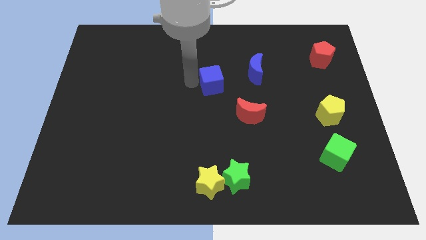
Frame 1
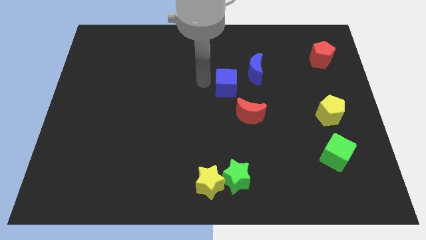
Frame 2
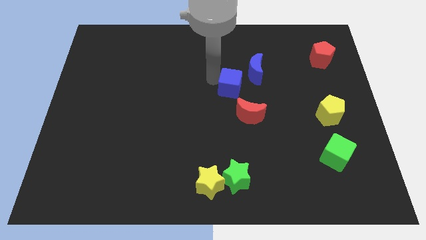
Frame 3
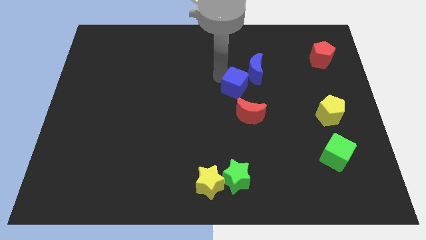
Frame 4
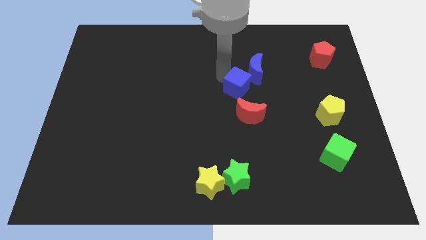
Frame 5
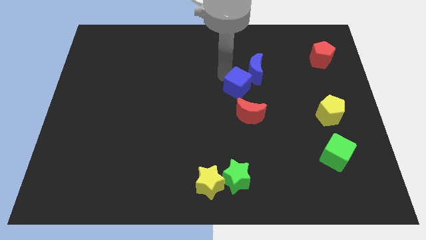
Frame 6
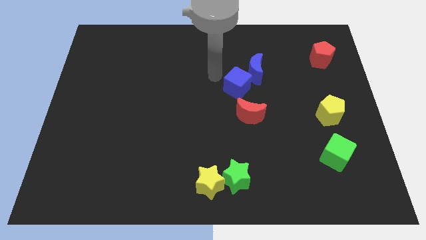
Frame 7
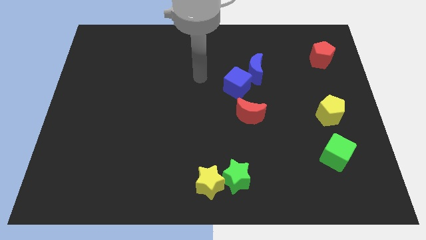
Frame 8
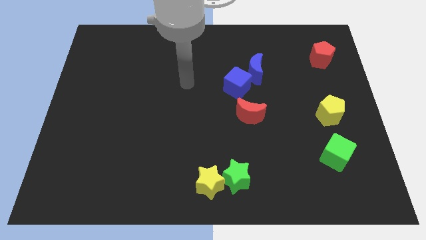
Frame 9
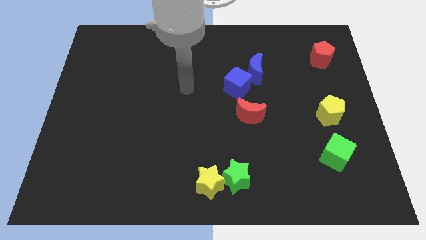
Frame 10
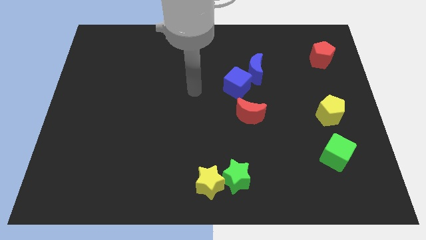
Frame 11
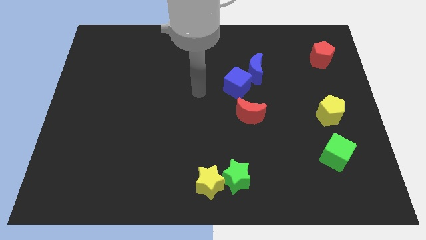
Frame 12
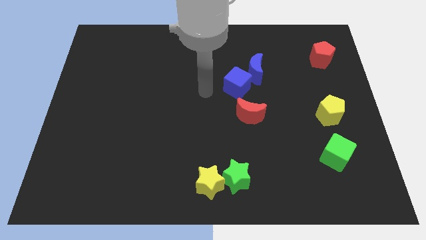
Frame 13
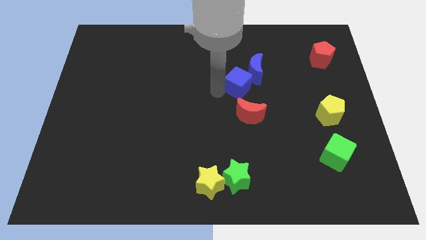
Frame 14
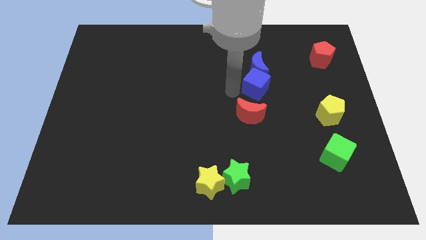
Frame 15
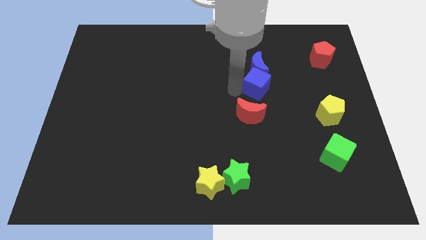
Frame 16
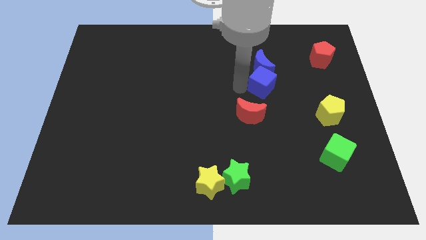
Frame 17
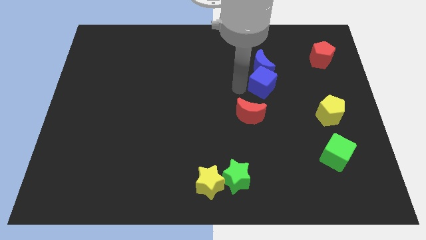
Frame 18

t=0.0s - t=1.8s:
move the blue cube at the bottom of the blue moon

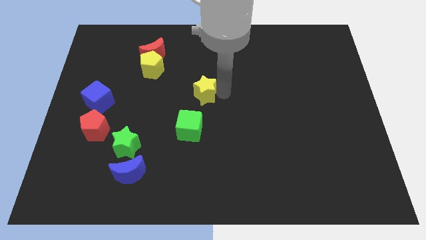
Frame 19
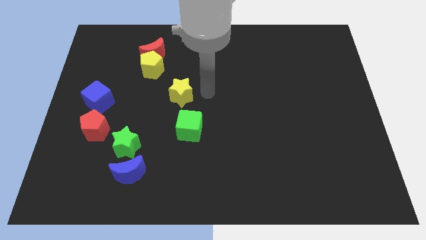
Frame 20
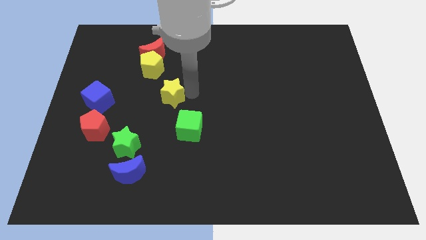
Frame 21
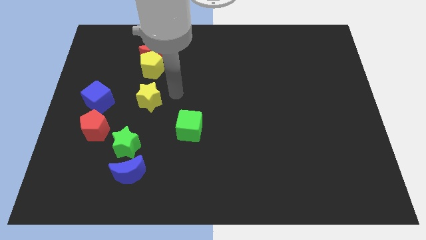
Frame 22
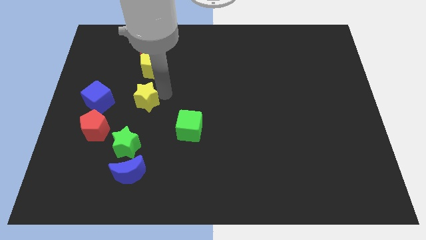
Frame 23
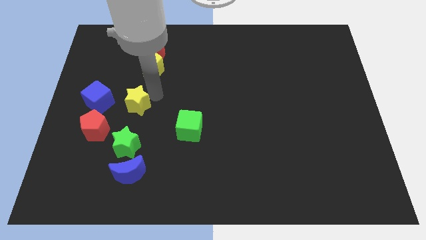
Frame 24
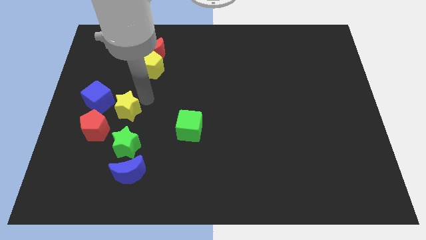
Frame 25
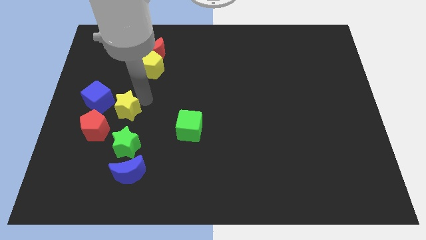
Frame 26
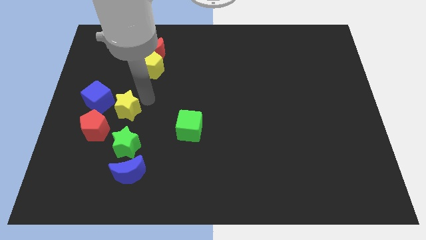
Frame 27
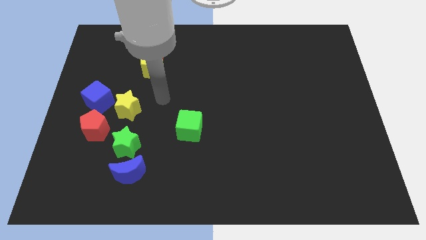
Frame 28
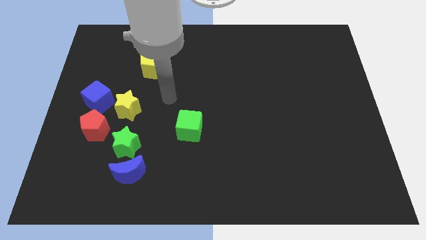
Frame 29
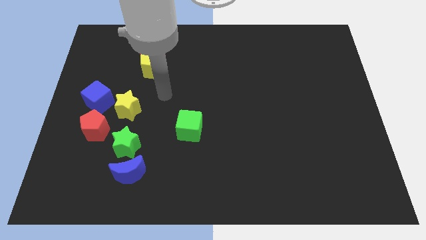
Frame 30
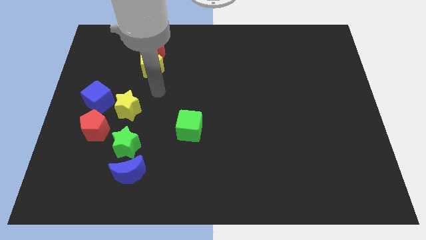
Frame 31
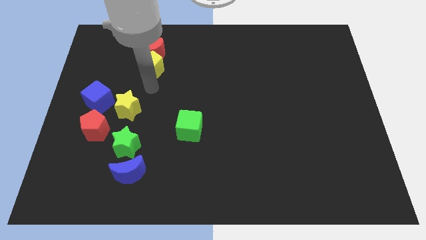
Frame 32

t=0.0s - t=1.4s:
move yellow star close to the blue cube

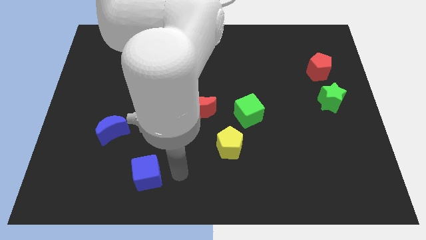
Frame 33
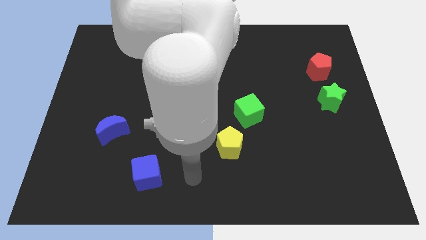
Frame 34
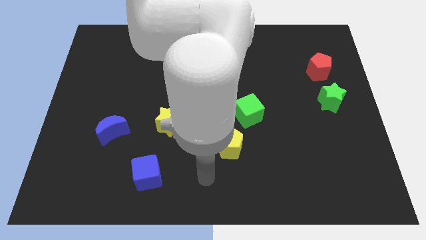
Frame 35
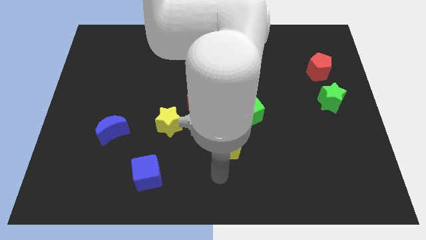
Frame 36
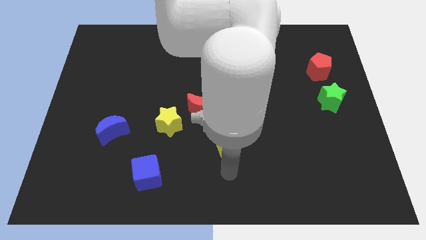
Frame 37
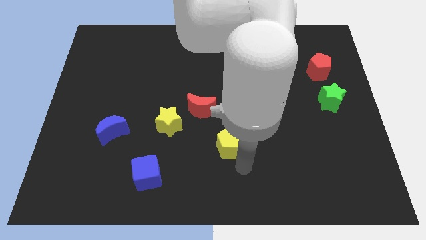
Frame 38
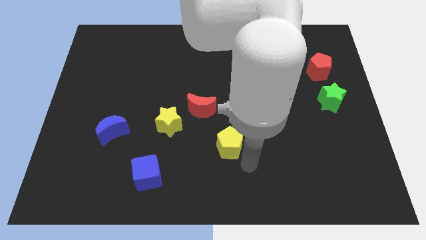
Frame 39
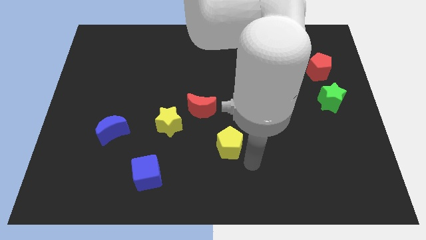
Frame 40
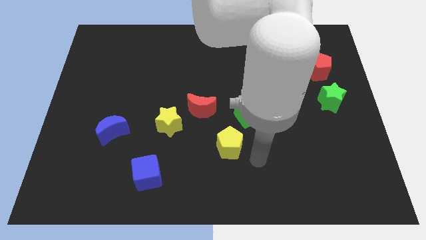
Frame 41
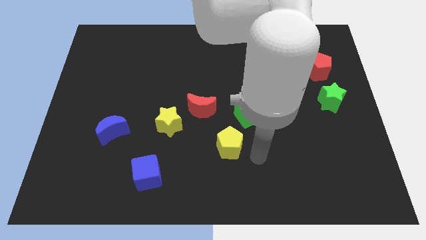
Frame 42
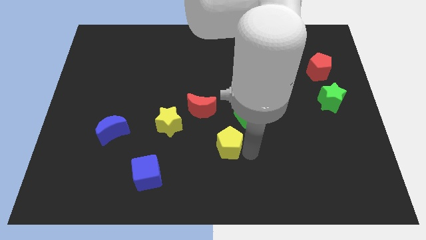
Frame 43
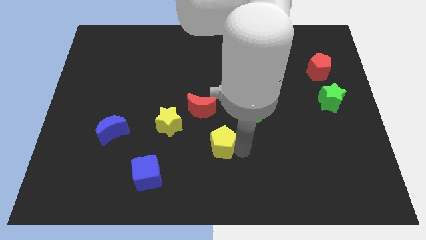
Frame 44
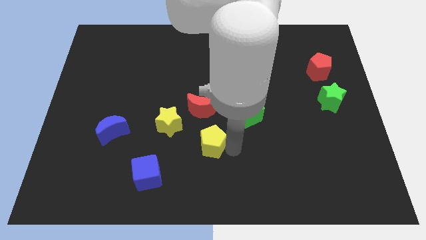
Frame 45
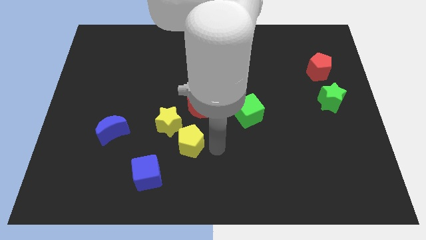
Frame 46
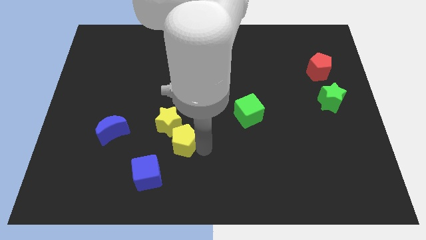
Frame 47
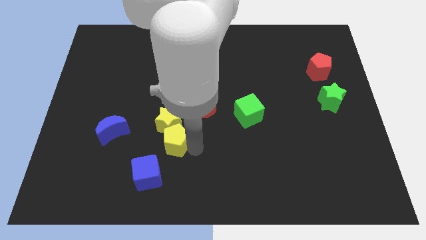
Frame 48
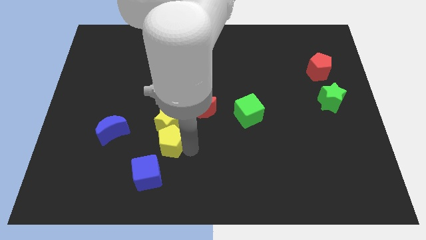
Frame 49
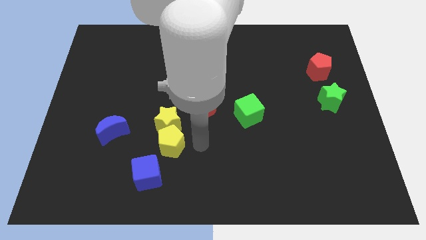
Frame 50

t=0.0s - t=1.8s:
push the yellow pentagon into the yellow star

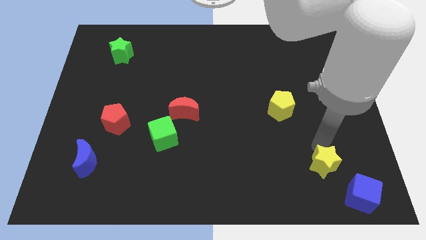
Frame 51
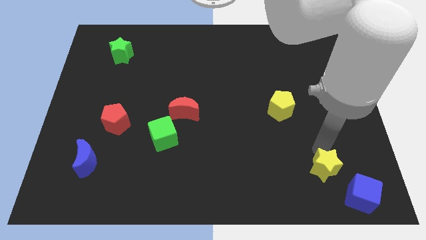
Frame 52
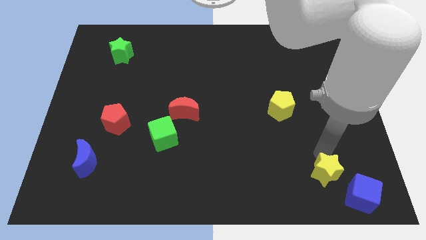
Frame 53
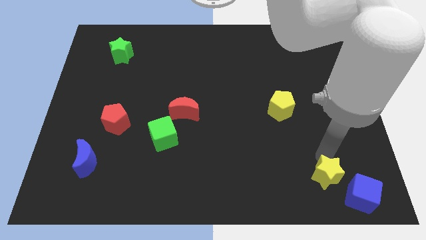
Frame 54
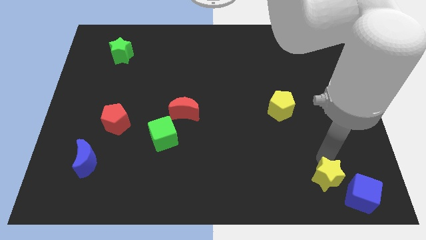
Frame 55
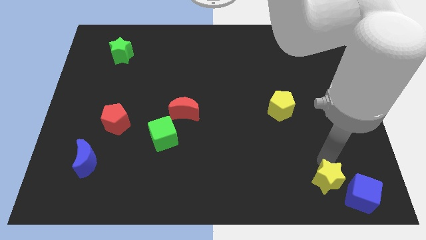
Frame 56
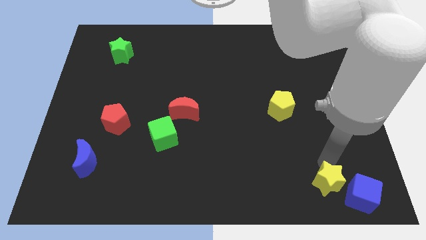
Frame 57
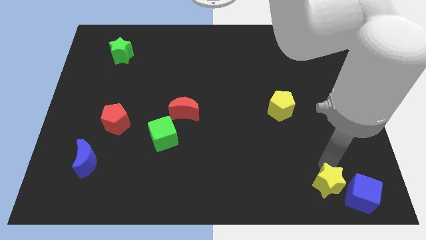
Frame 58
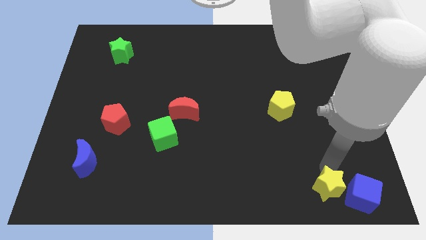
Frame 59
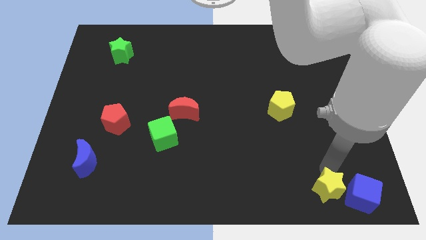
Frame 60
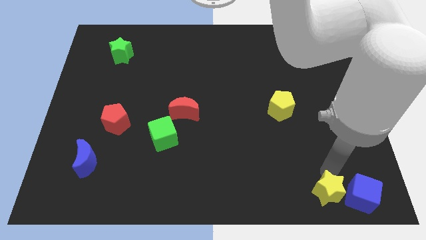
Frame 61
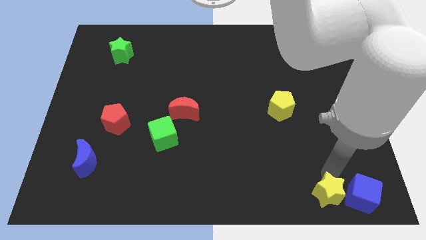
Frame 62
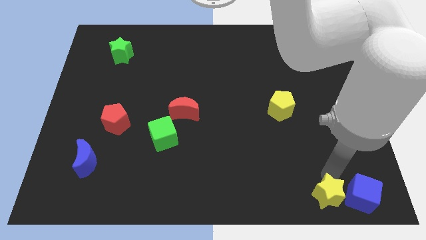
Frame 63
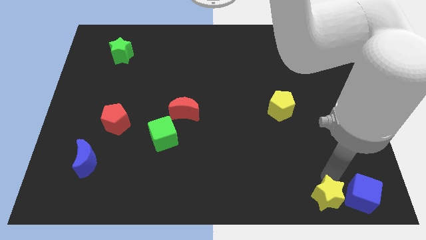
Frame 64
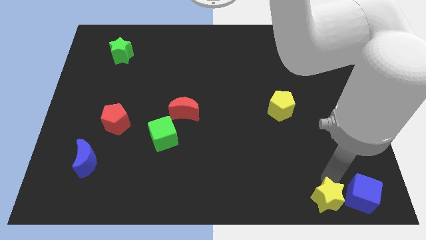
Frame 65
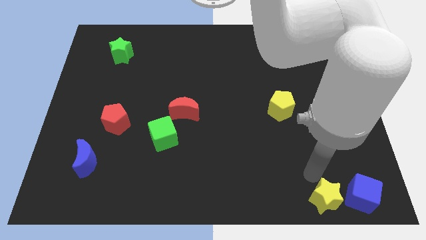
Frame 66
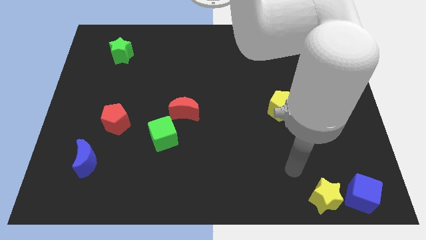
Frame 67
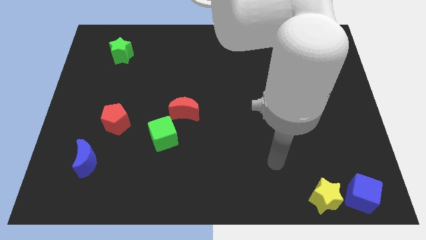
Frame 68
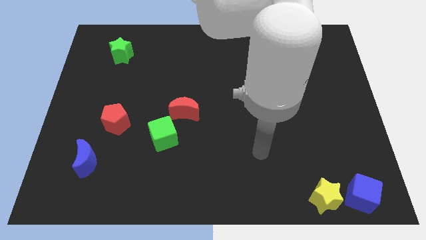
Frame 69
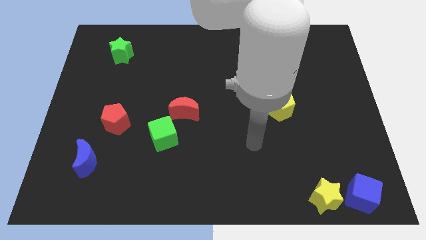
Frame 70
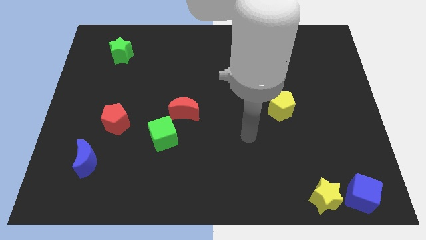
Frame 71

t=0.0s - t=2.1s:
slide yellow star into blue cube

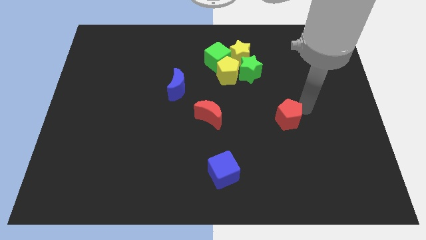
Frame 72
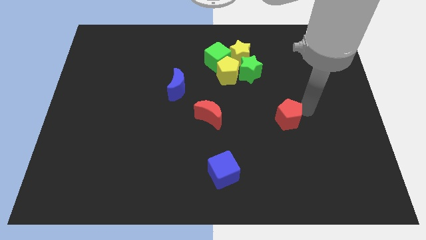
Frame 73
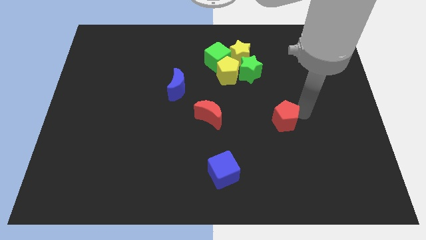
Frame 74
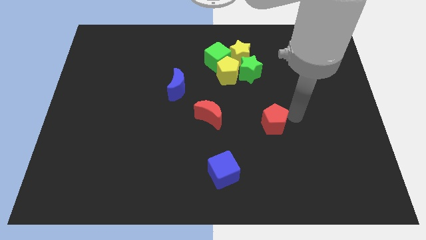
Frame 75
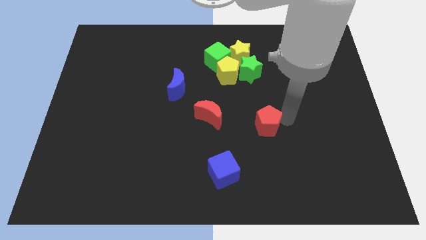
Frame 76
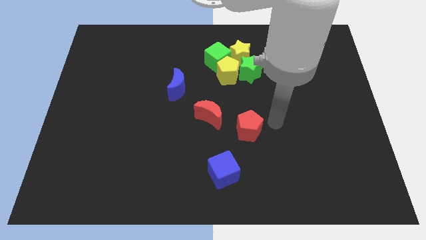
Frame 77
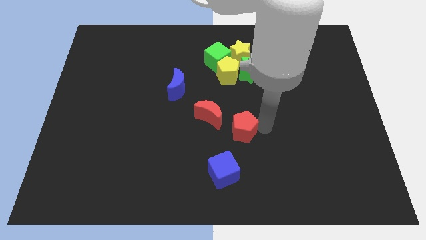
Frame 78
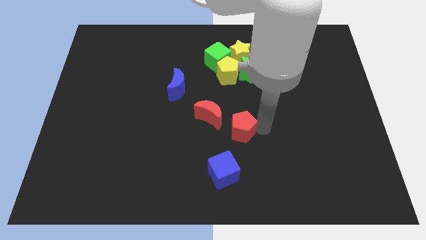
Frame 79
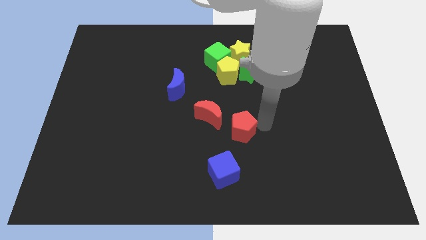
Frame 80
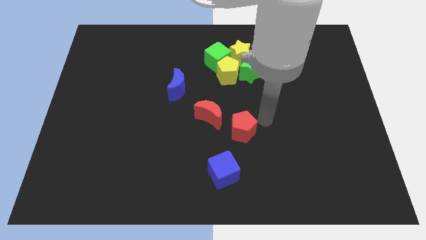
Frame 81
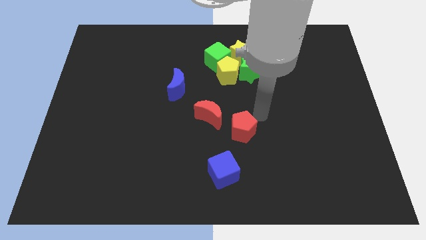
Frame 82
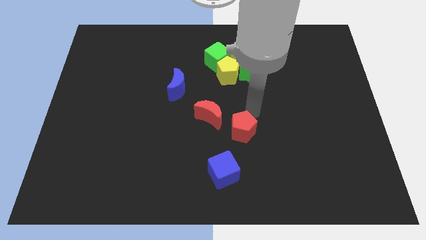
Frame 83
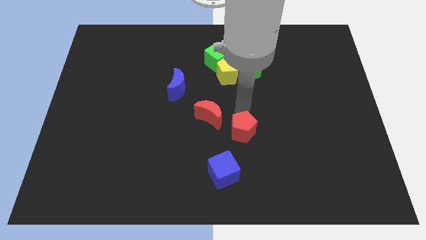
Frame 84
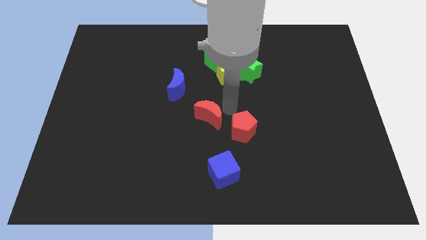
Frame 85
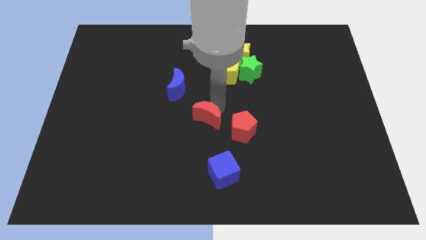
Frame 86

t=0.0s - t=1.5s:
push the red pentagon diagonally right to the red crescent

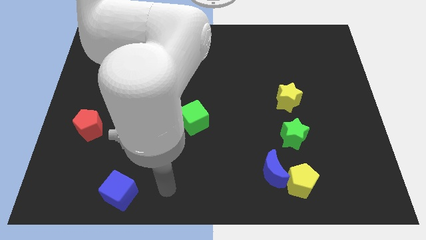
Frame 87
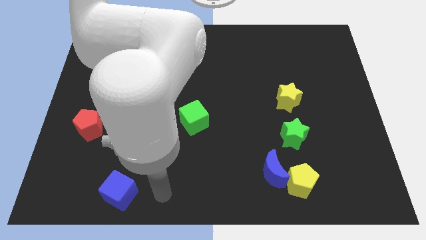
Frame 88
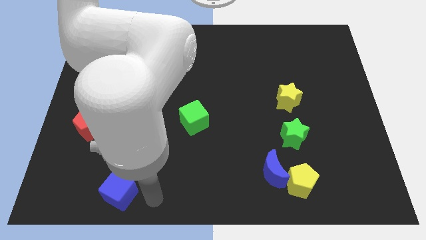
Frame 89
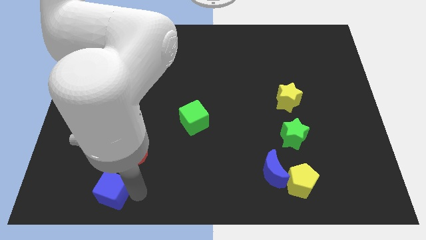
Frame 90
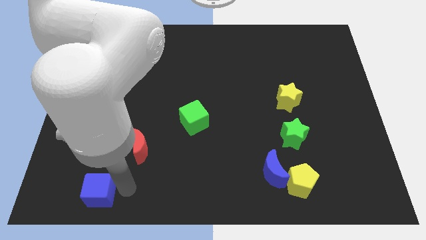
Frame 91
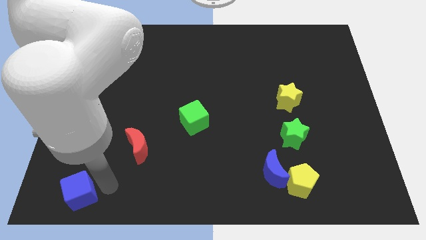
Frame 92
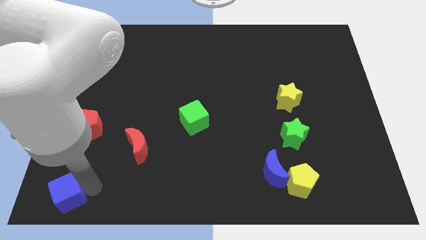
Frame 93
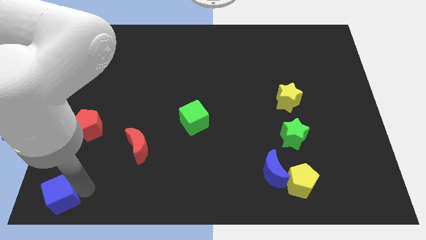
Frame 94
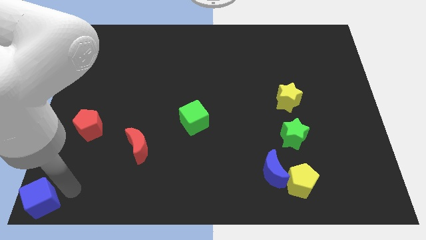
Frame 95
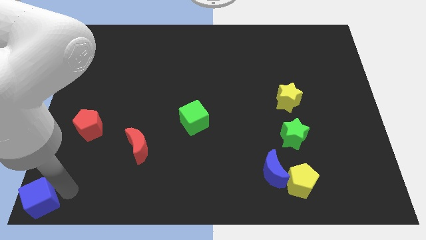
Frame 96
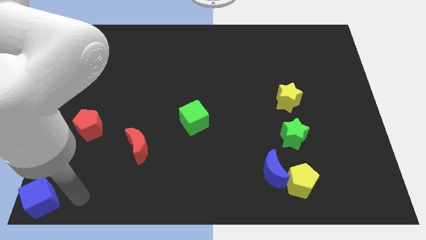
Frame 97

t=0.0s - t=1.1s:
move the blue cube to the bottom left of the board
